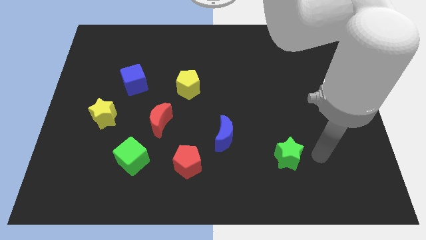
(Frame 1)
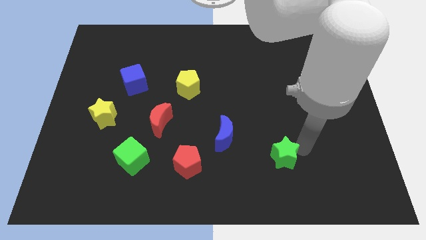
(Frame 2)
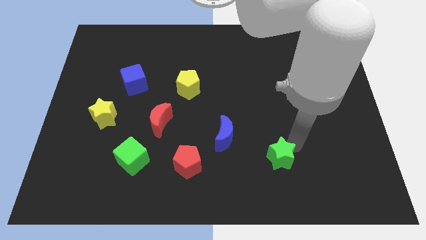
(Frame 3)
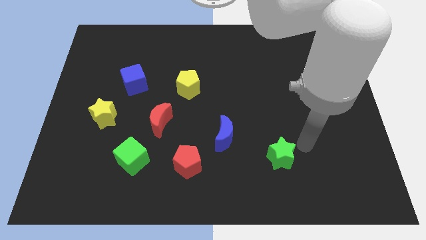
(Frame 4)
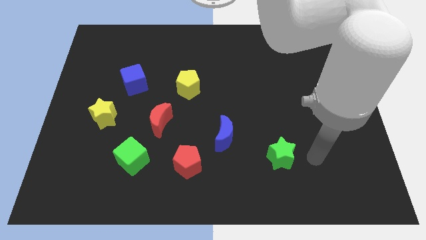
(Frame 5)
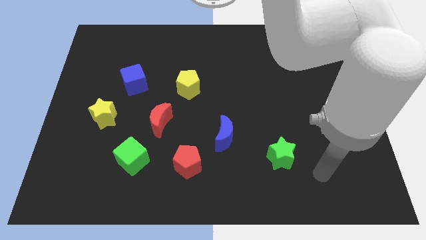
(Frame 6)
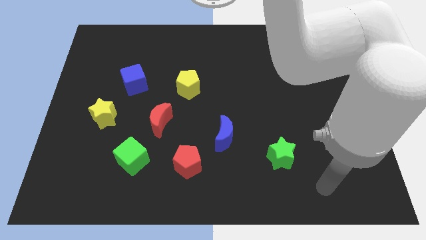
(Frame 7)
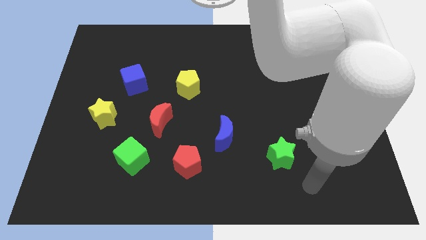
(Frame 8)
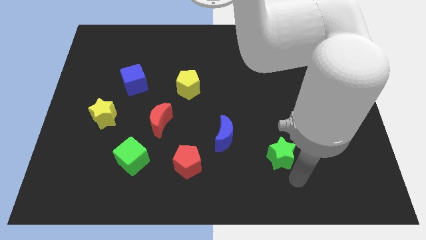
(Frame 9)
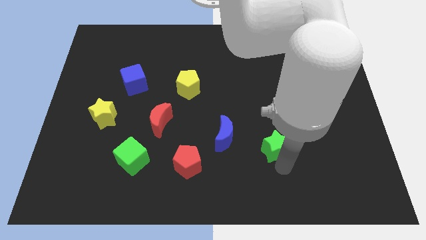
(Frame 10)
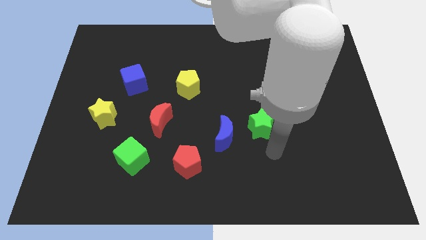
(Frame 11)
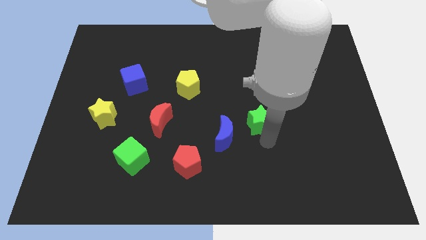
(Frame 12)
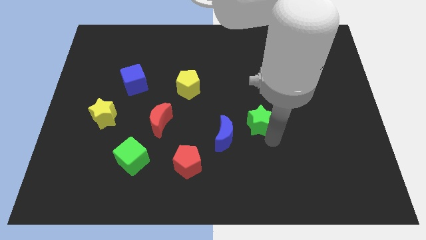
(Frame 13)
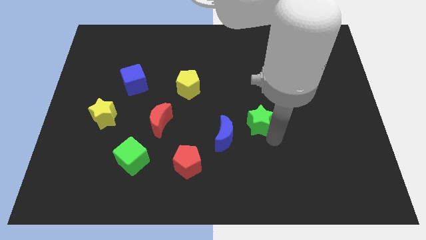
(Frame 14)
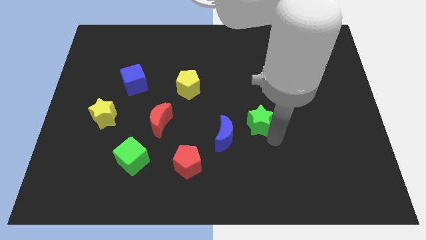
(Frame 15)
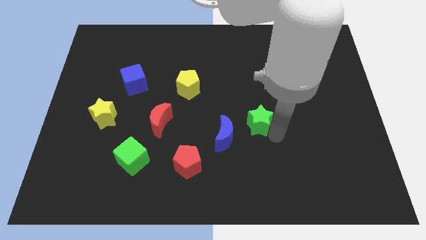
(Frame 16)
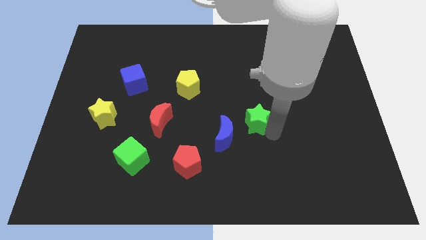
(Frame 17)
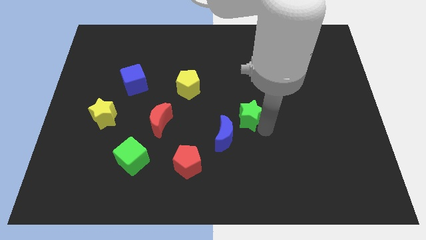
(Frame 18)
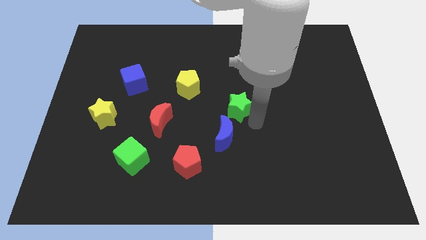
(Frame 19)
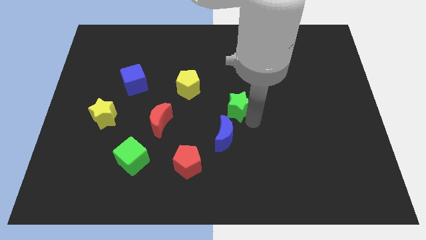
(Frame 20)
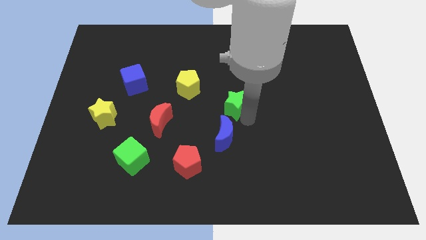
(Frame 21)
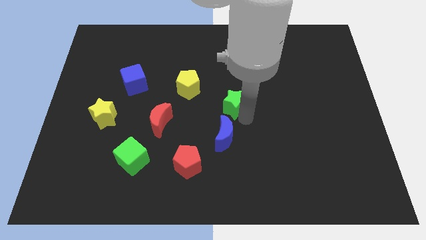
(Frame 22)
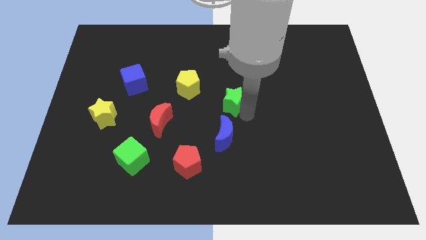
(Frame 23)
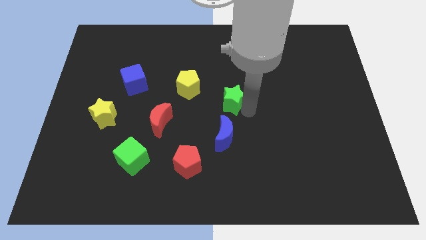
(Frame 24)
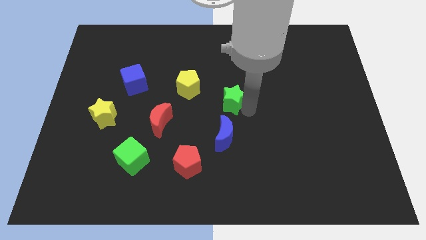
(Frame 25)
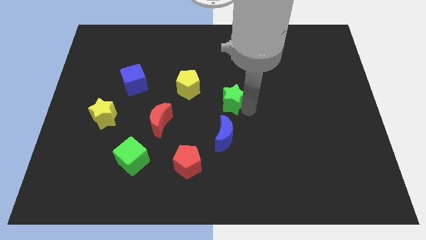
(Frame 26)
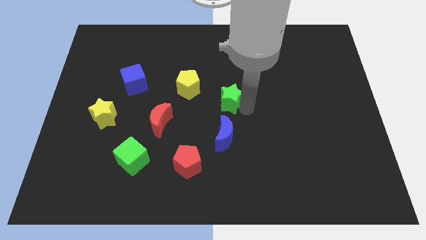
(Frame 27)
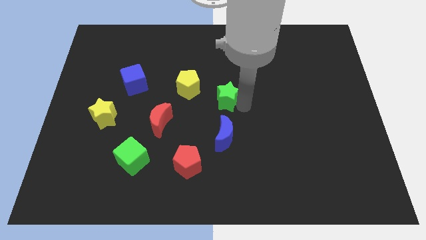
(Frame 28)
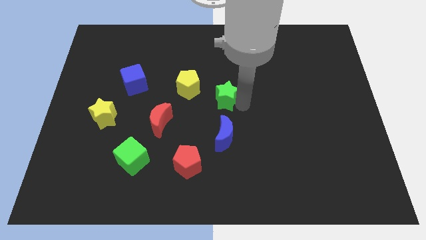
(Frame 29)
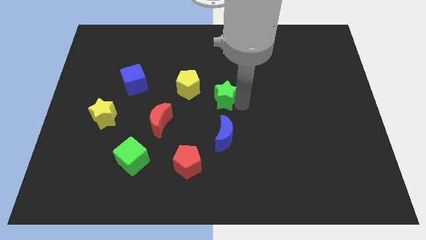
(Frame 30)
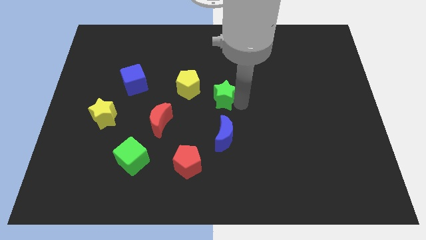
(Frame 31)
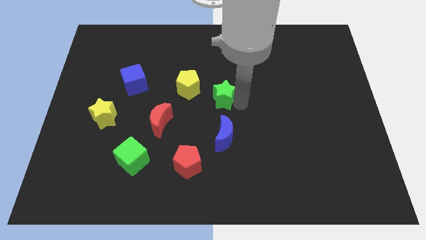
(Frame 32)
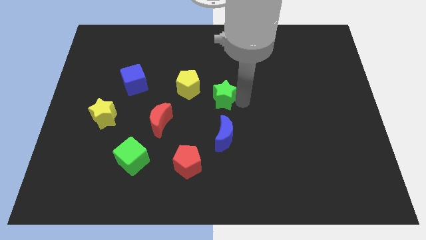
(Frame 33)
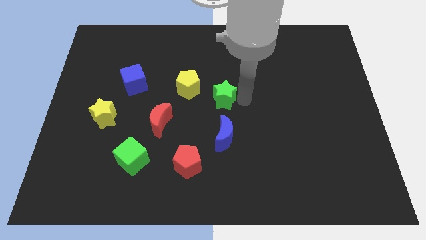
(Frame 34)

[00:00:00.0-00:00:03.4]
put green star above blue moon

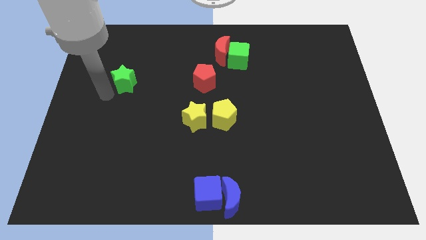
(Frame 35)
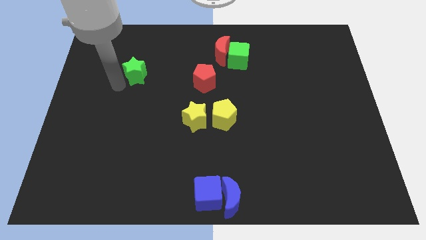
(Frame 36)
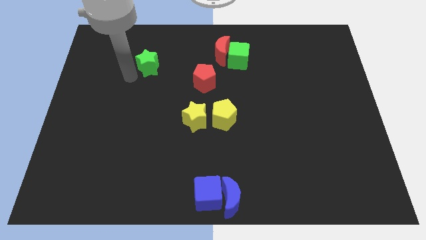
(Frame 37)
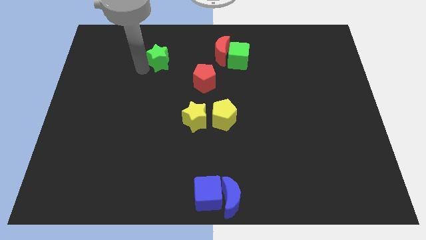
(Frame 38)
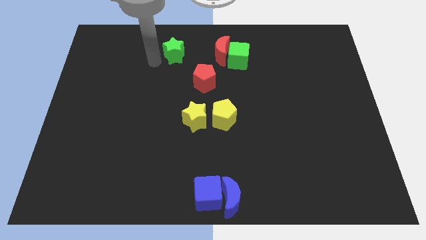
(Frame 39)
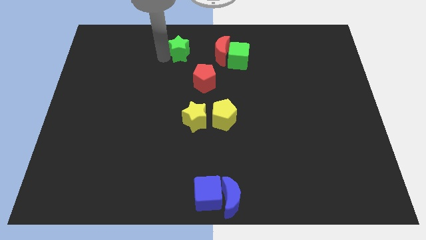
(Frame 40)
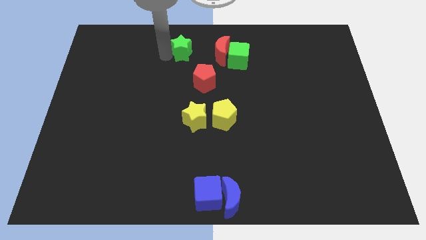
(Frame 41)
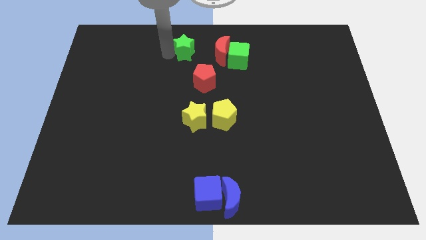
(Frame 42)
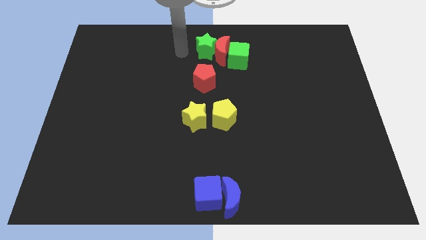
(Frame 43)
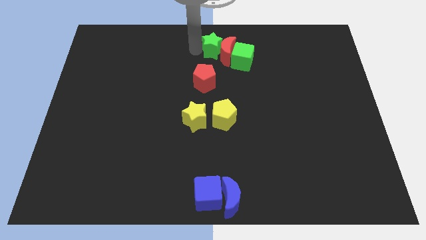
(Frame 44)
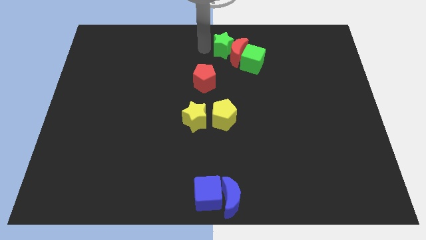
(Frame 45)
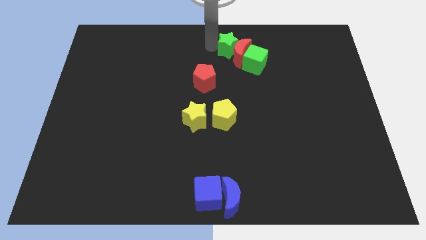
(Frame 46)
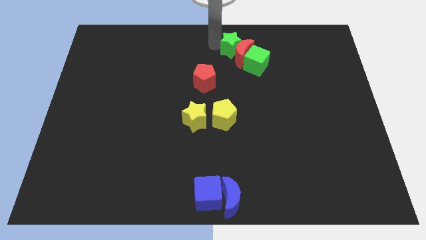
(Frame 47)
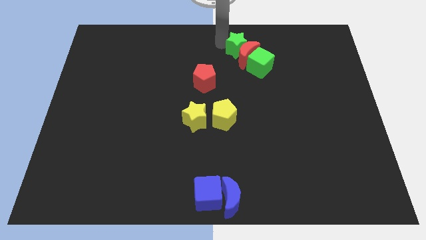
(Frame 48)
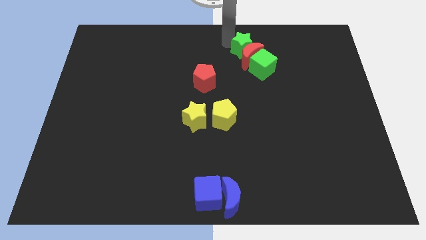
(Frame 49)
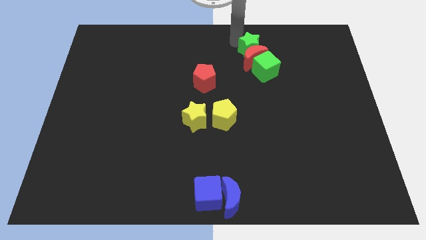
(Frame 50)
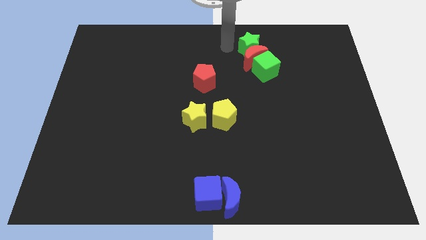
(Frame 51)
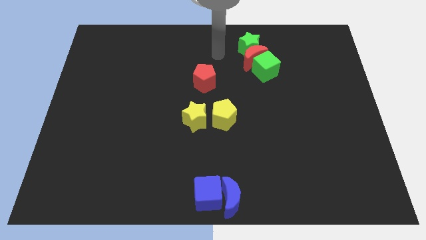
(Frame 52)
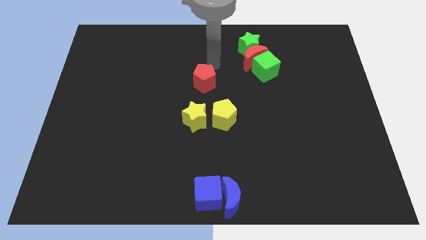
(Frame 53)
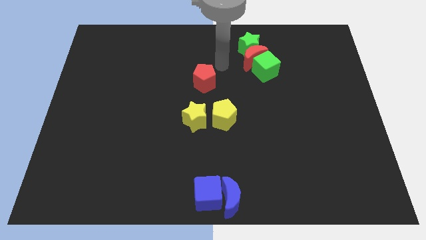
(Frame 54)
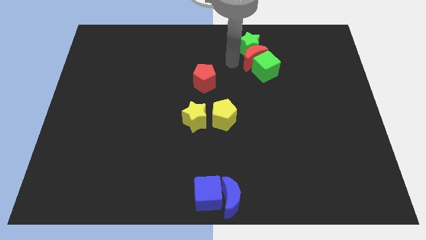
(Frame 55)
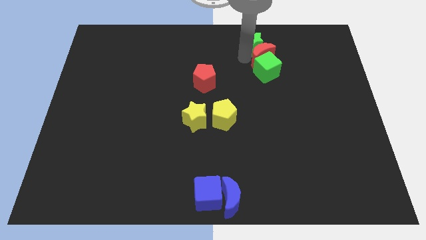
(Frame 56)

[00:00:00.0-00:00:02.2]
move green star to form a vertical line

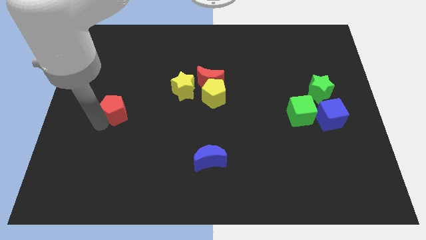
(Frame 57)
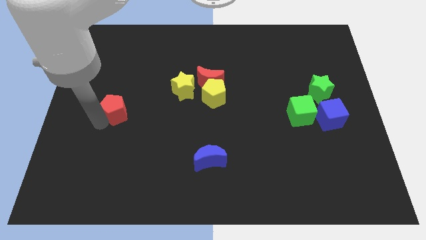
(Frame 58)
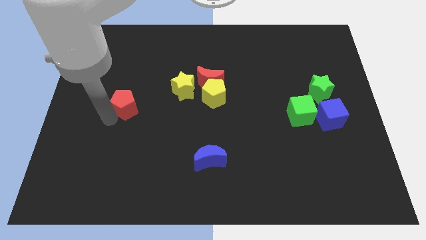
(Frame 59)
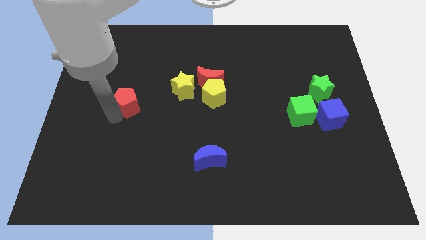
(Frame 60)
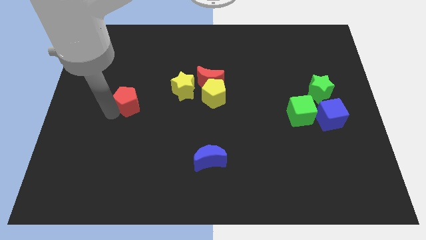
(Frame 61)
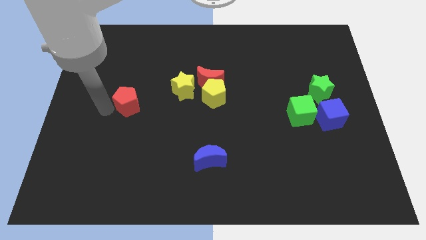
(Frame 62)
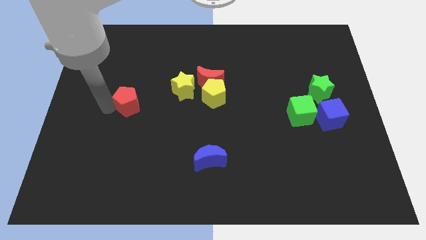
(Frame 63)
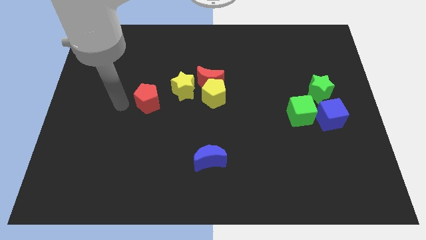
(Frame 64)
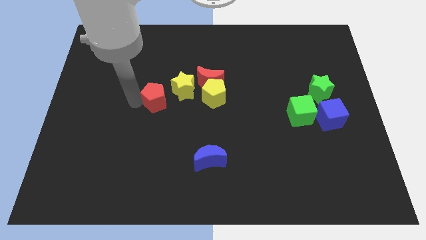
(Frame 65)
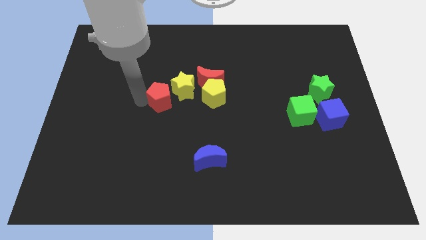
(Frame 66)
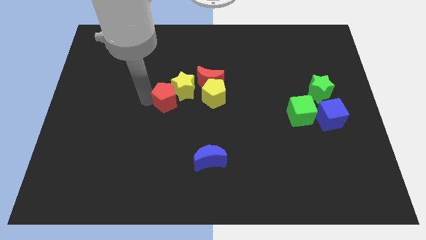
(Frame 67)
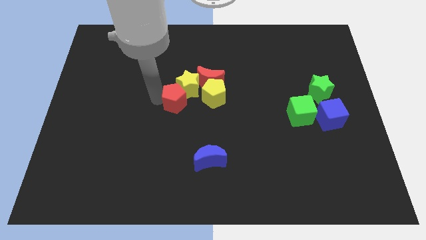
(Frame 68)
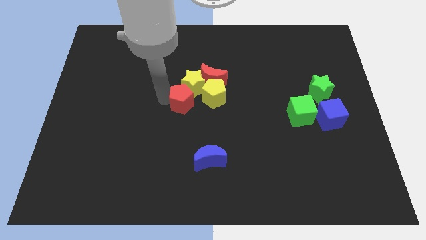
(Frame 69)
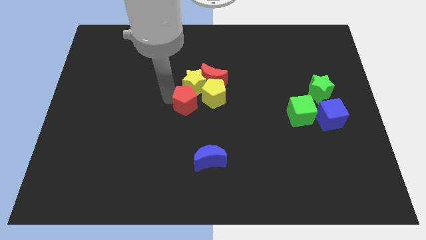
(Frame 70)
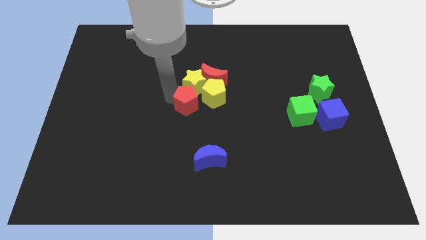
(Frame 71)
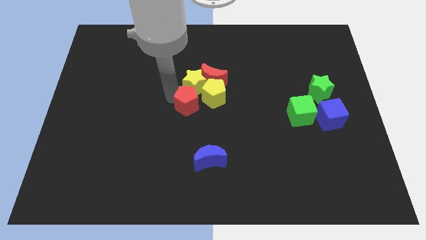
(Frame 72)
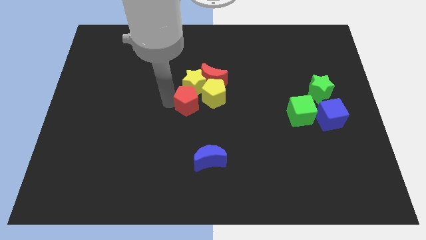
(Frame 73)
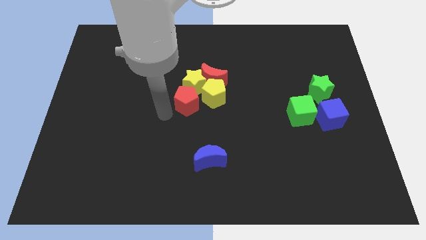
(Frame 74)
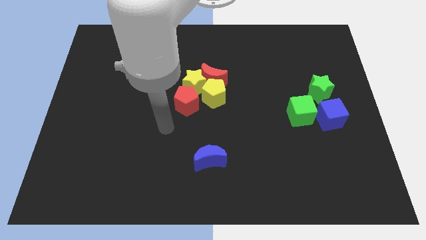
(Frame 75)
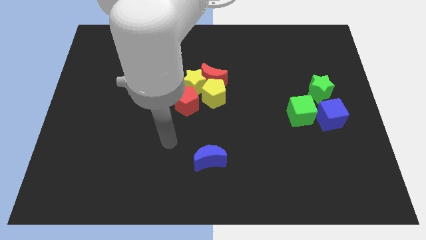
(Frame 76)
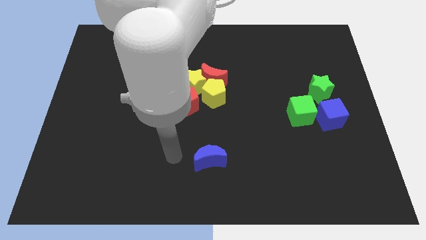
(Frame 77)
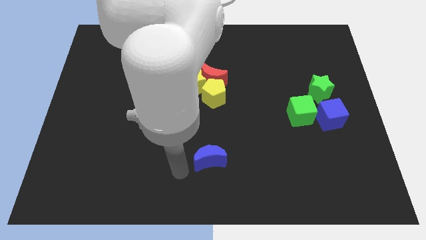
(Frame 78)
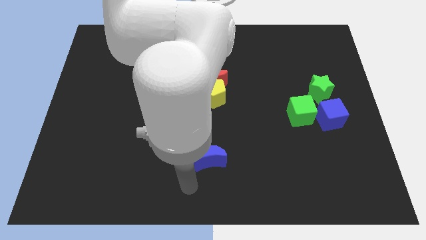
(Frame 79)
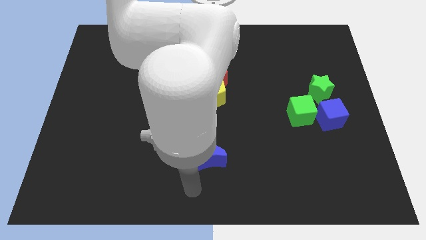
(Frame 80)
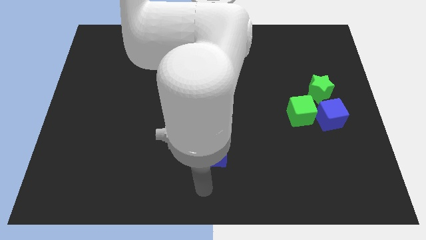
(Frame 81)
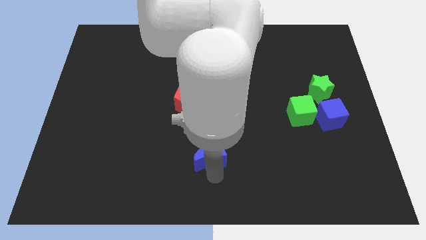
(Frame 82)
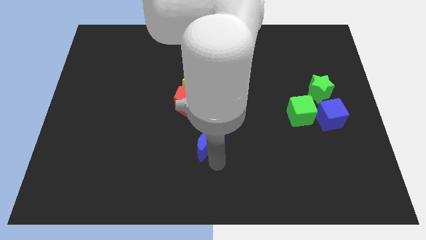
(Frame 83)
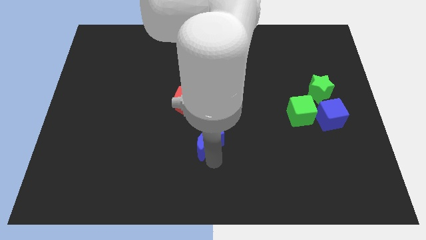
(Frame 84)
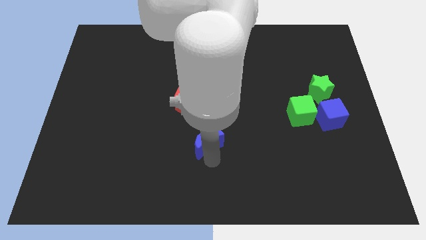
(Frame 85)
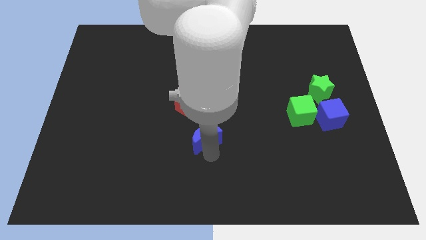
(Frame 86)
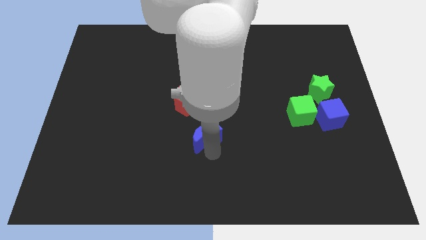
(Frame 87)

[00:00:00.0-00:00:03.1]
move the red pentagon towards the yellow star

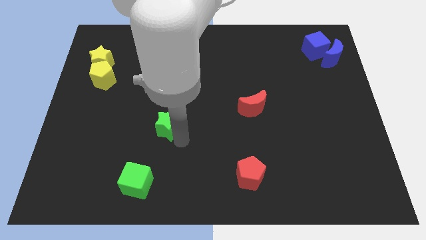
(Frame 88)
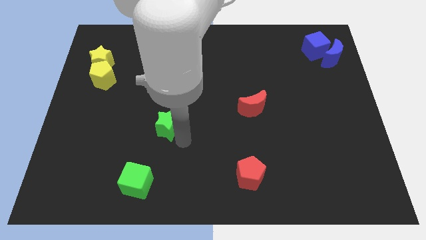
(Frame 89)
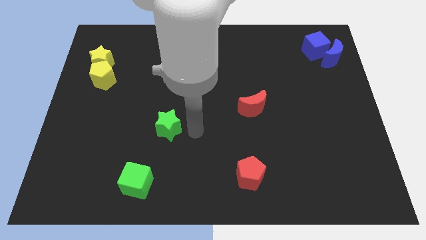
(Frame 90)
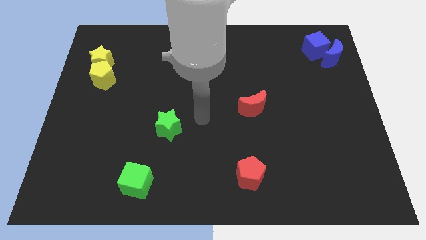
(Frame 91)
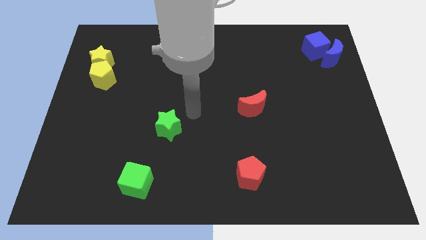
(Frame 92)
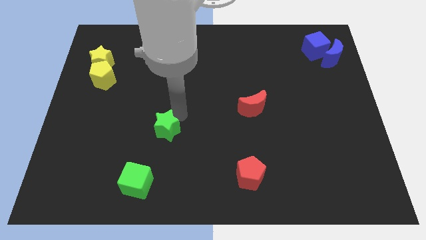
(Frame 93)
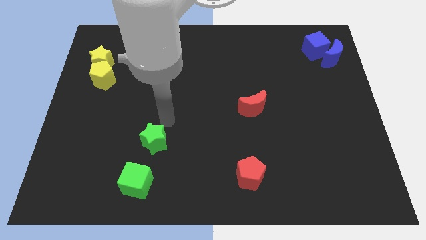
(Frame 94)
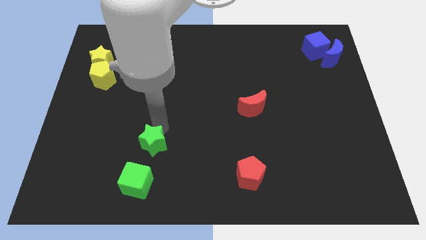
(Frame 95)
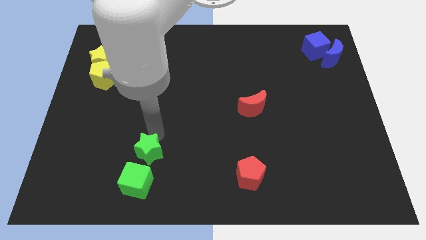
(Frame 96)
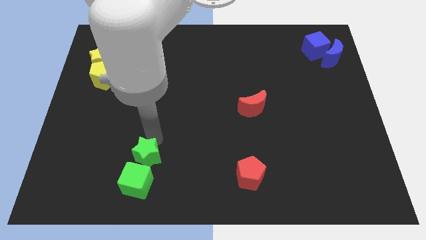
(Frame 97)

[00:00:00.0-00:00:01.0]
push the green star close to the green cube
